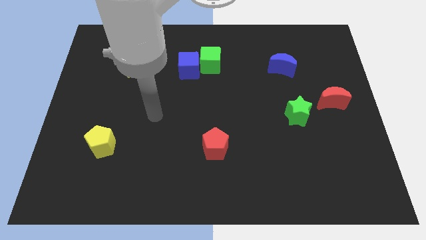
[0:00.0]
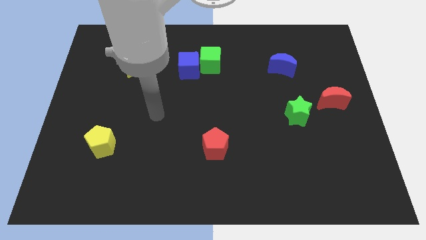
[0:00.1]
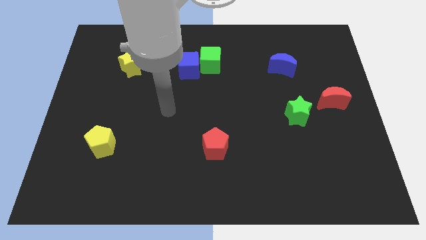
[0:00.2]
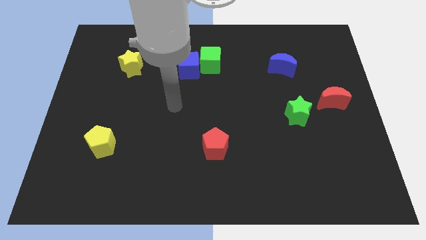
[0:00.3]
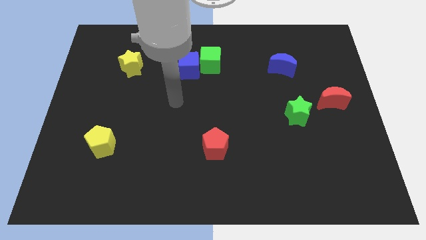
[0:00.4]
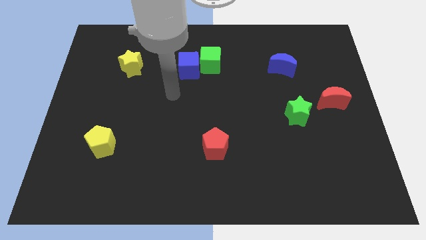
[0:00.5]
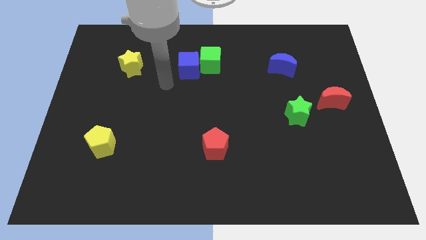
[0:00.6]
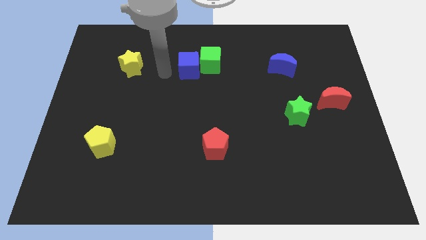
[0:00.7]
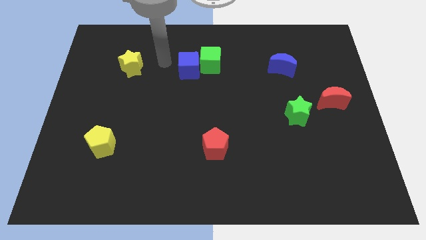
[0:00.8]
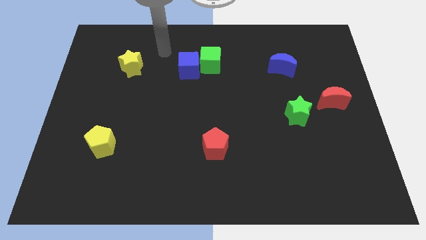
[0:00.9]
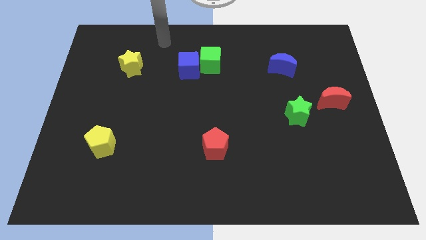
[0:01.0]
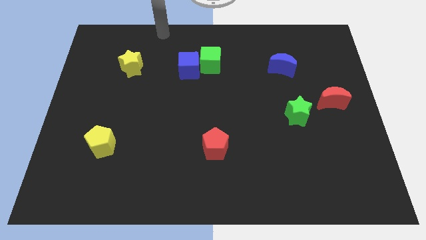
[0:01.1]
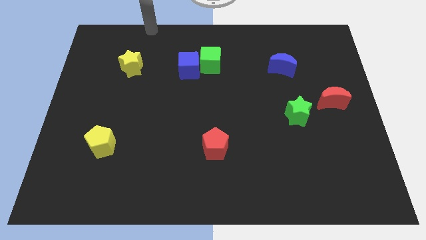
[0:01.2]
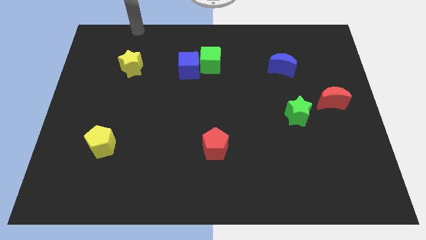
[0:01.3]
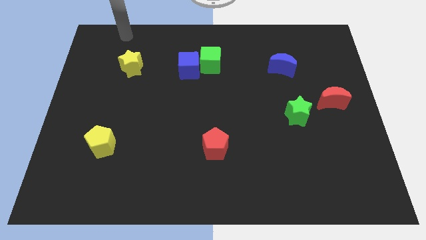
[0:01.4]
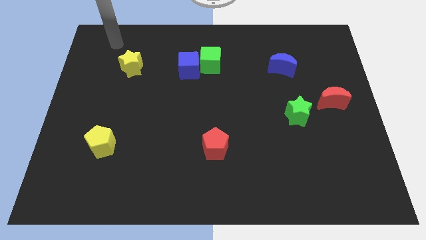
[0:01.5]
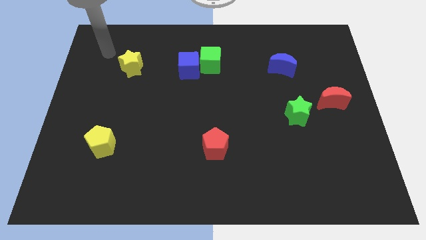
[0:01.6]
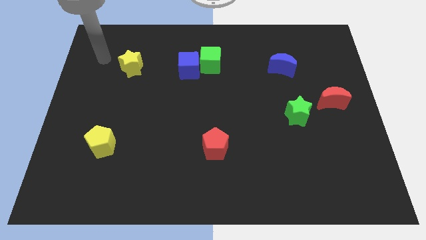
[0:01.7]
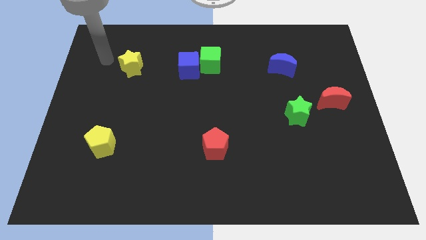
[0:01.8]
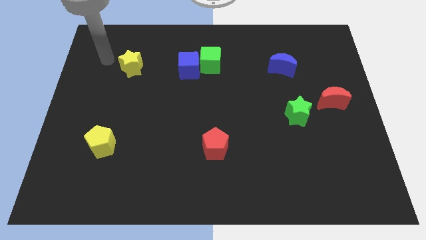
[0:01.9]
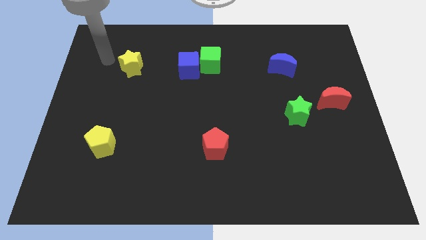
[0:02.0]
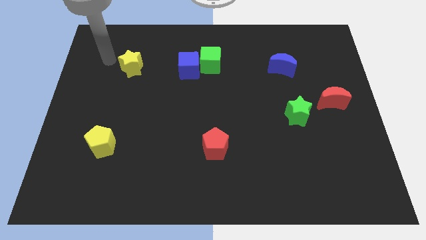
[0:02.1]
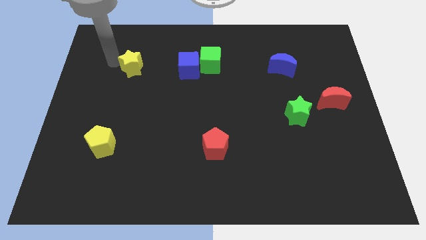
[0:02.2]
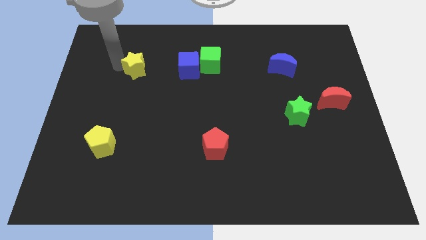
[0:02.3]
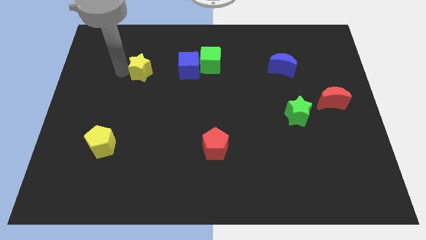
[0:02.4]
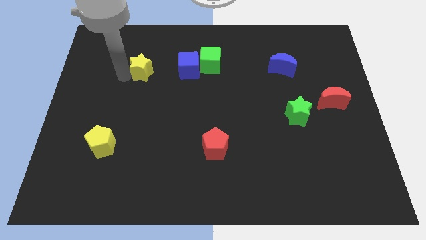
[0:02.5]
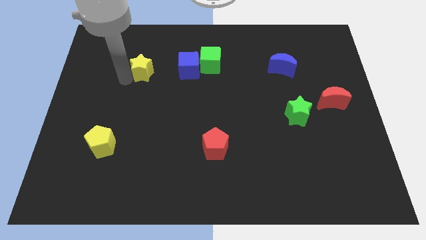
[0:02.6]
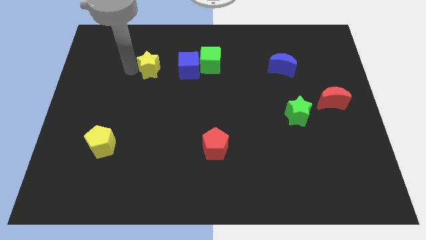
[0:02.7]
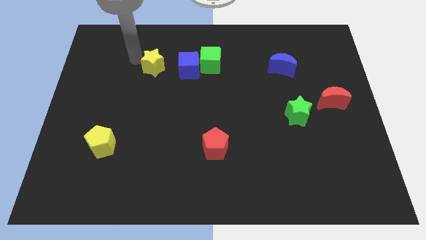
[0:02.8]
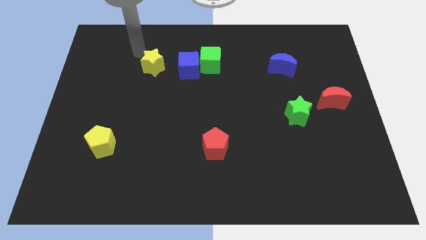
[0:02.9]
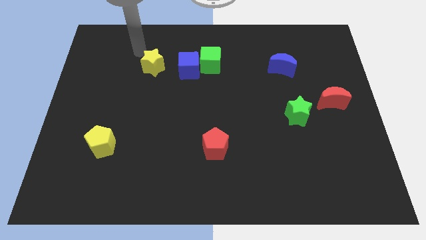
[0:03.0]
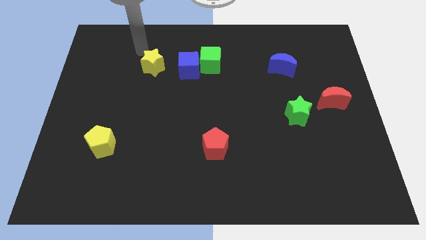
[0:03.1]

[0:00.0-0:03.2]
move the yellow star towards the blue cube

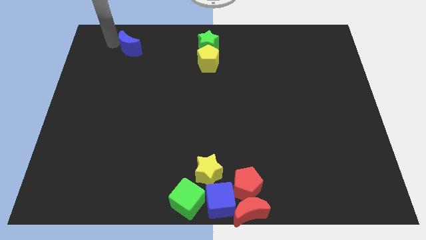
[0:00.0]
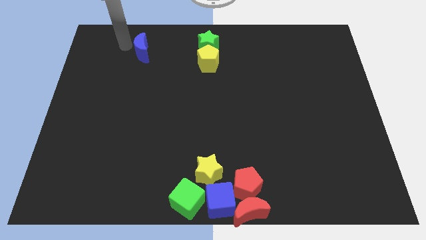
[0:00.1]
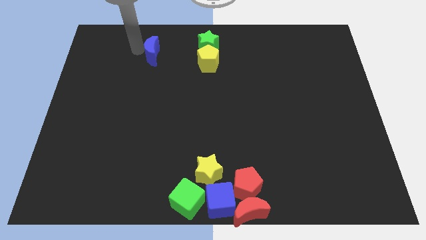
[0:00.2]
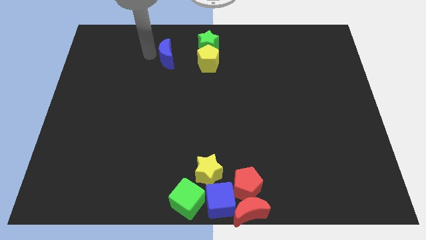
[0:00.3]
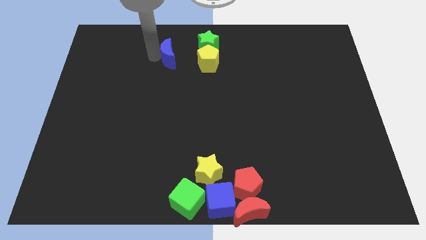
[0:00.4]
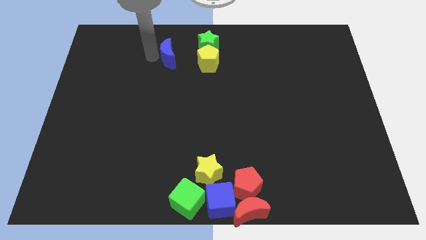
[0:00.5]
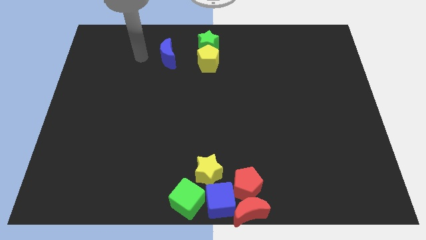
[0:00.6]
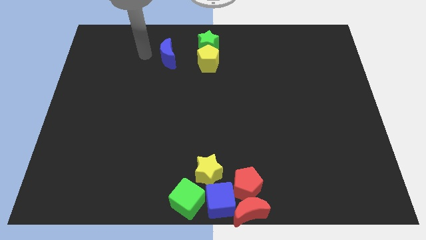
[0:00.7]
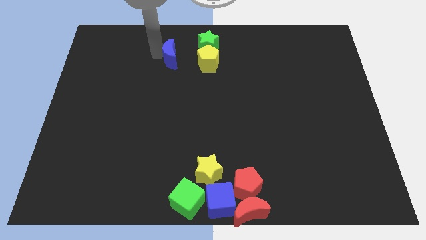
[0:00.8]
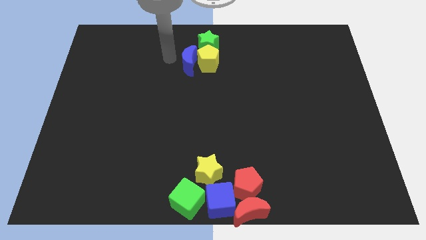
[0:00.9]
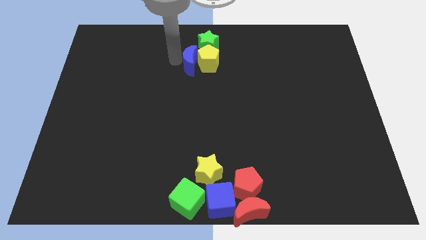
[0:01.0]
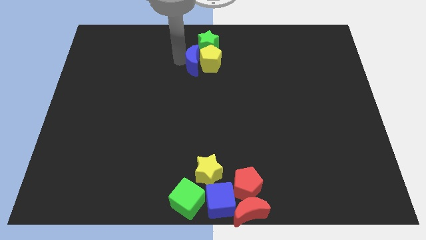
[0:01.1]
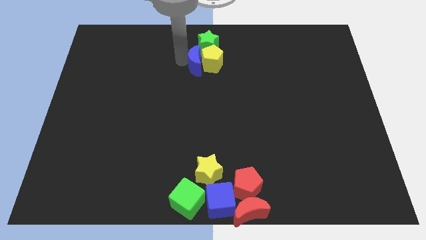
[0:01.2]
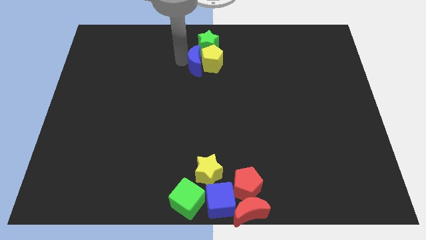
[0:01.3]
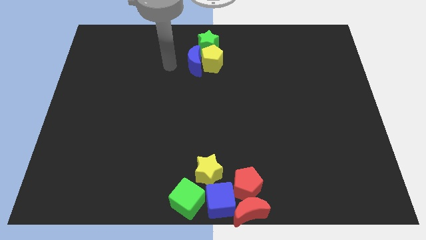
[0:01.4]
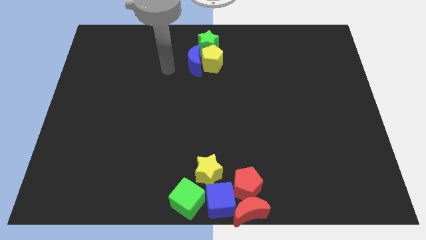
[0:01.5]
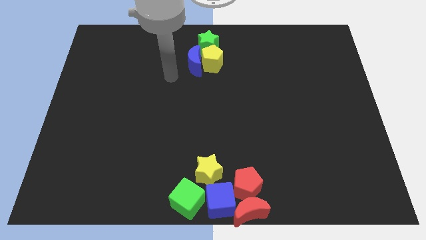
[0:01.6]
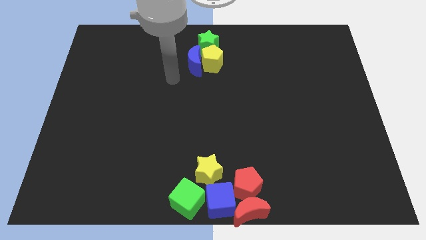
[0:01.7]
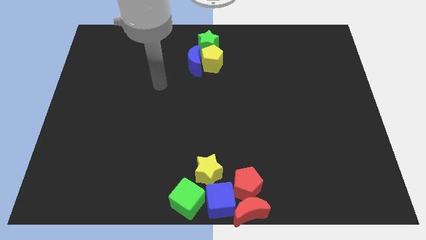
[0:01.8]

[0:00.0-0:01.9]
place blue crescent beside yellow pentagon

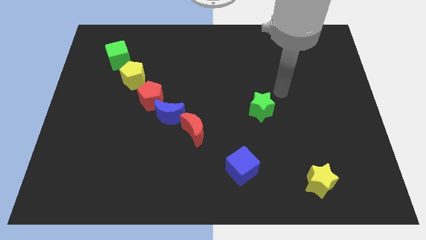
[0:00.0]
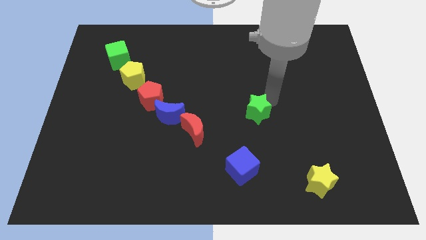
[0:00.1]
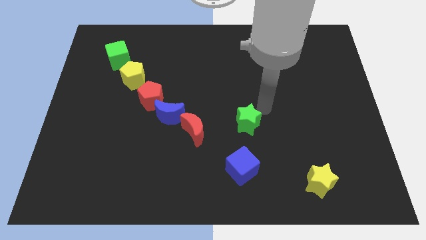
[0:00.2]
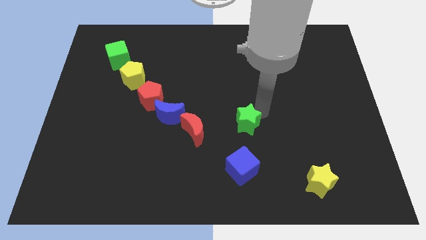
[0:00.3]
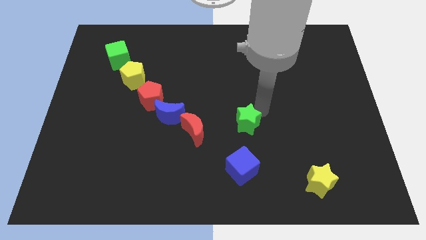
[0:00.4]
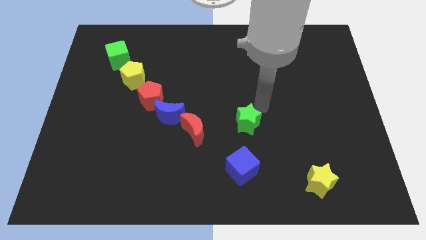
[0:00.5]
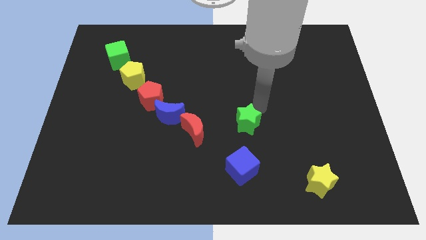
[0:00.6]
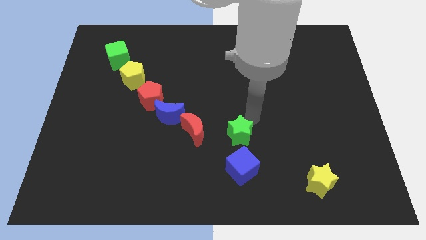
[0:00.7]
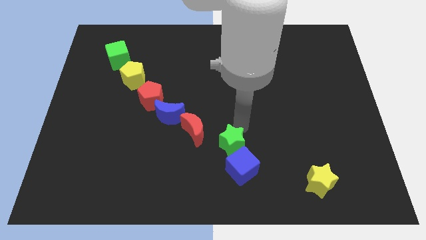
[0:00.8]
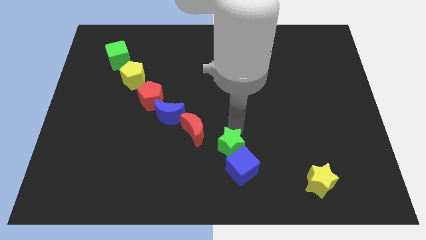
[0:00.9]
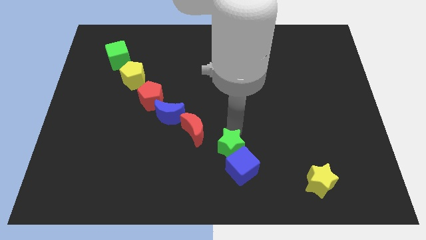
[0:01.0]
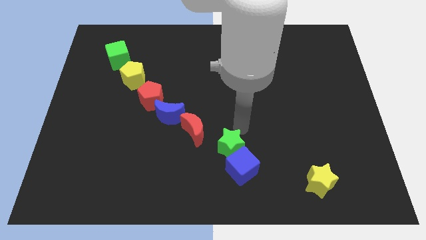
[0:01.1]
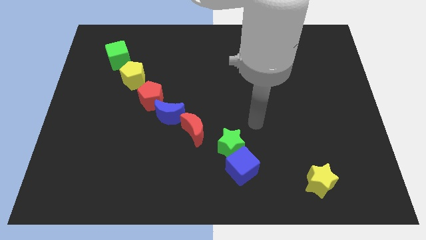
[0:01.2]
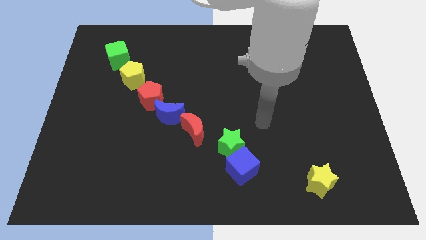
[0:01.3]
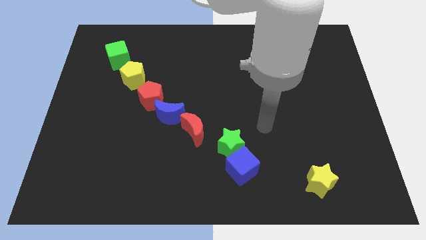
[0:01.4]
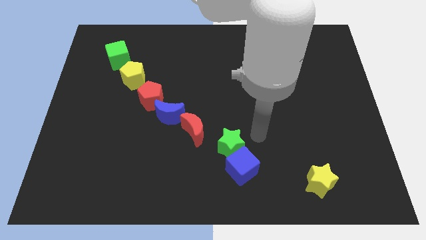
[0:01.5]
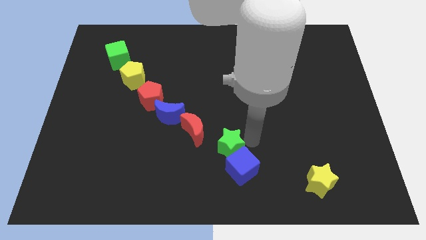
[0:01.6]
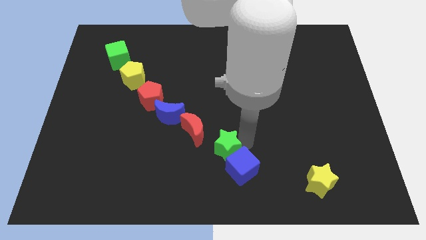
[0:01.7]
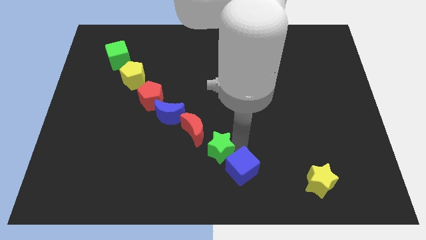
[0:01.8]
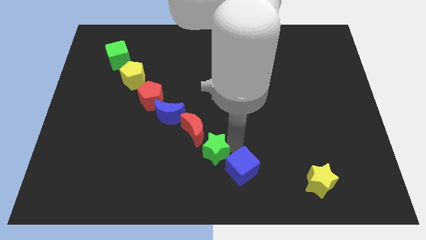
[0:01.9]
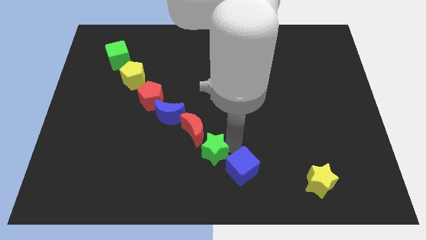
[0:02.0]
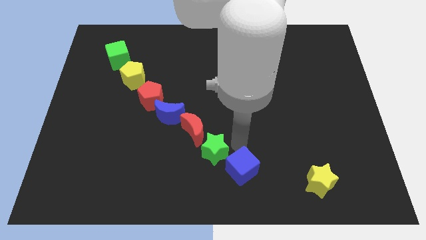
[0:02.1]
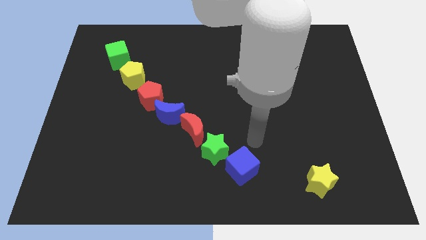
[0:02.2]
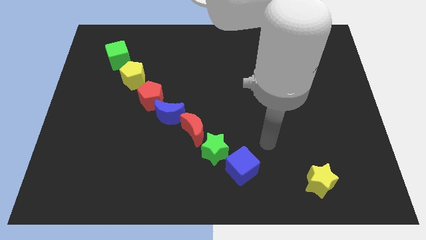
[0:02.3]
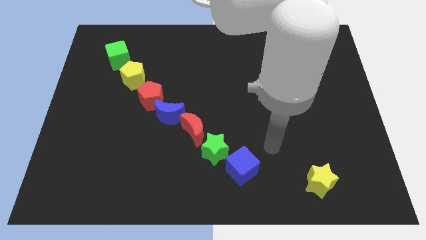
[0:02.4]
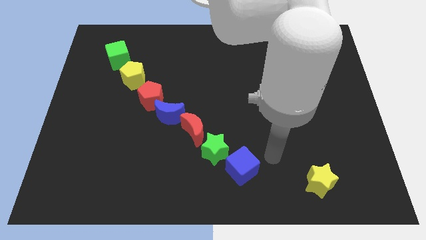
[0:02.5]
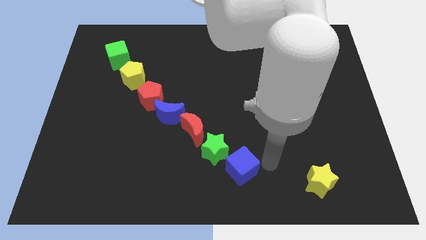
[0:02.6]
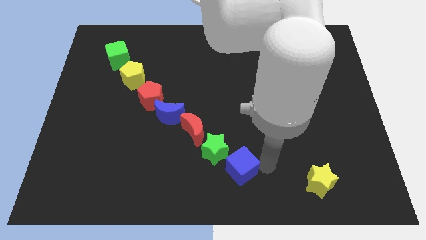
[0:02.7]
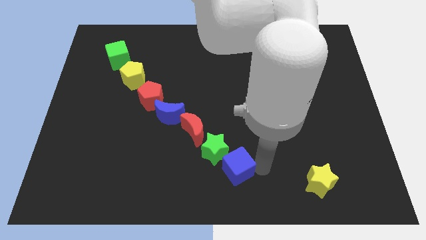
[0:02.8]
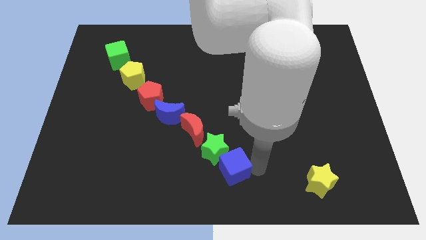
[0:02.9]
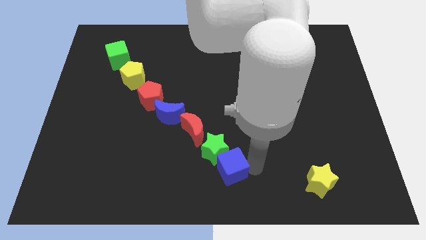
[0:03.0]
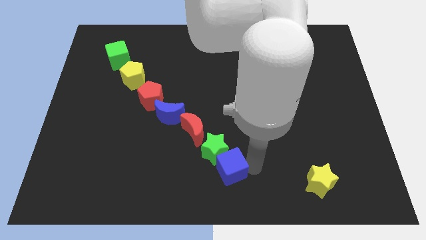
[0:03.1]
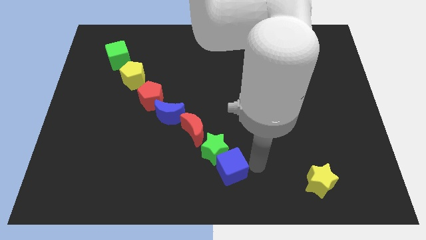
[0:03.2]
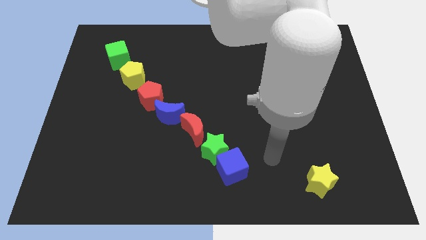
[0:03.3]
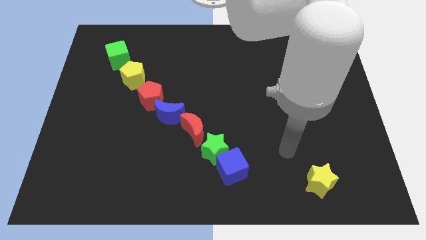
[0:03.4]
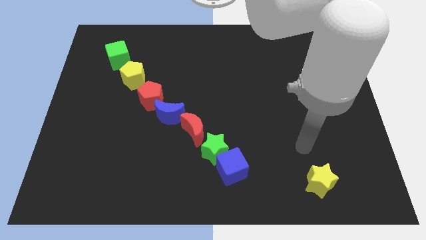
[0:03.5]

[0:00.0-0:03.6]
place the green star and blue cube to the bottom of red crescent
